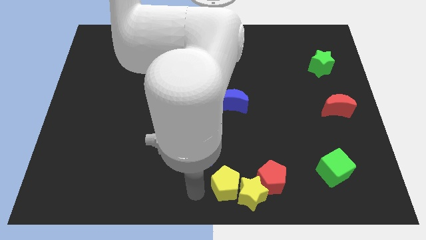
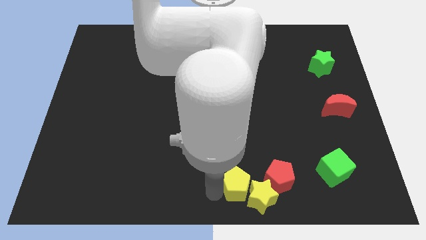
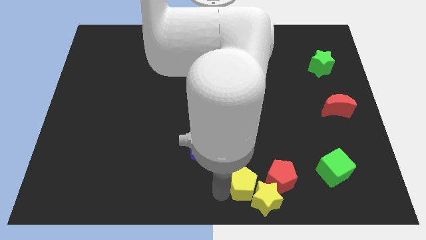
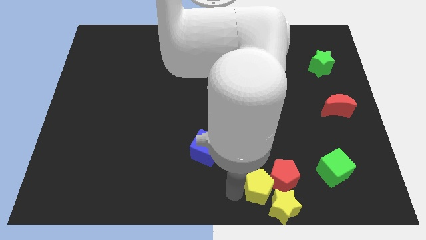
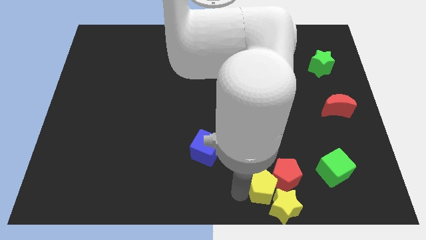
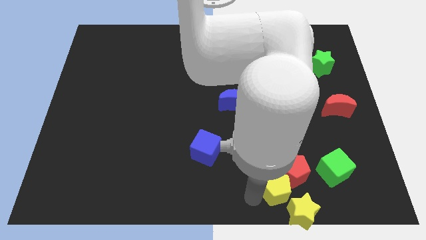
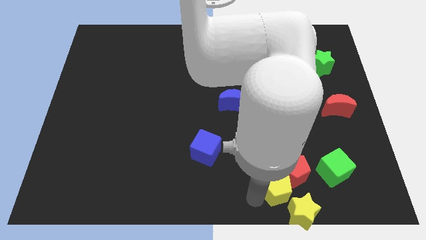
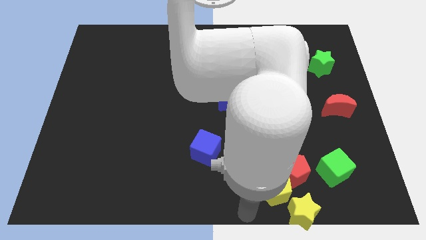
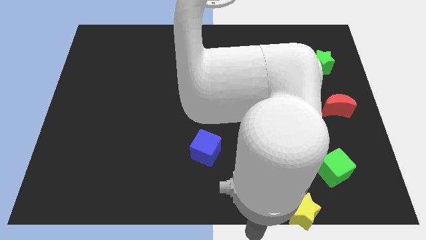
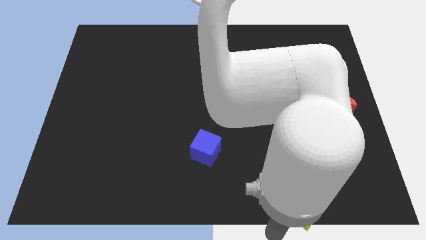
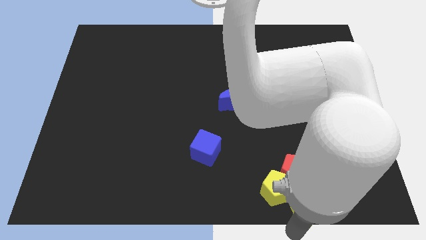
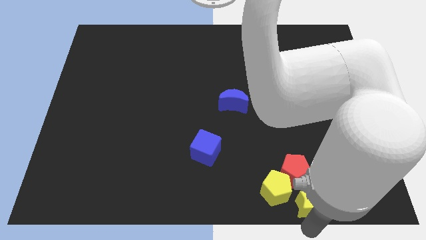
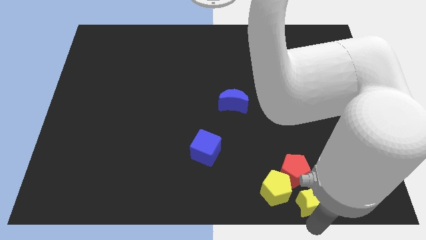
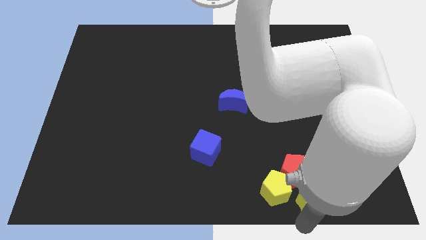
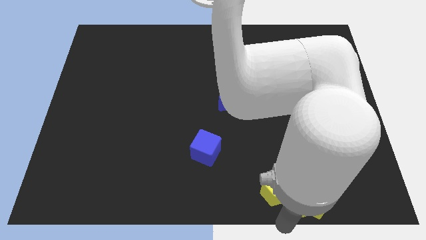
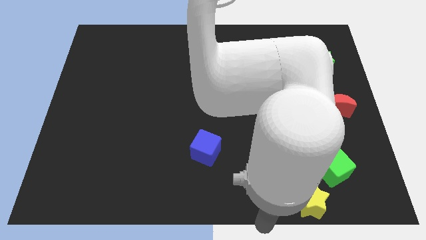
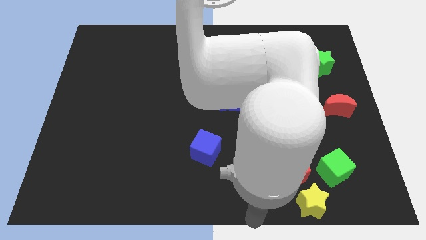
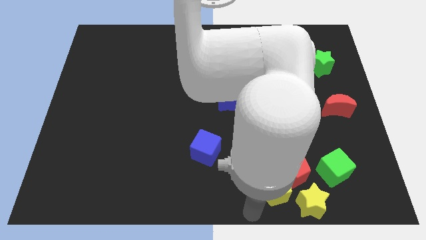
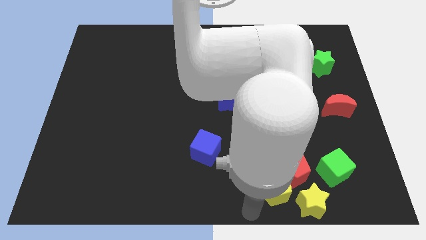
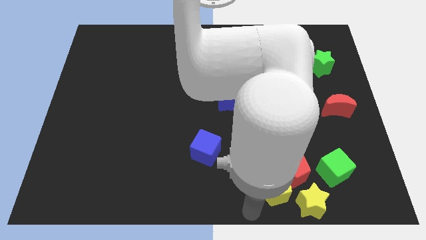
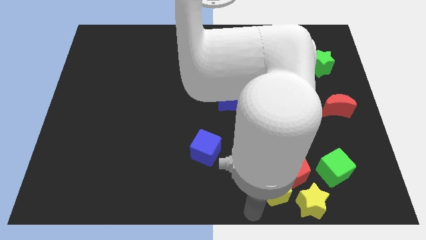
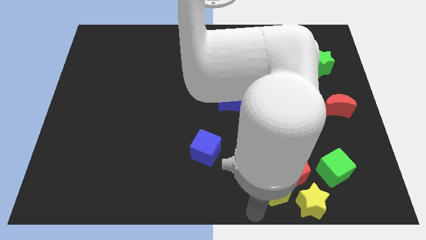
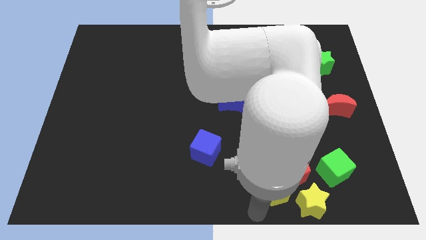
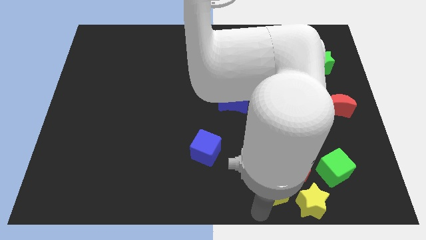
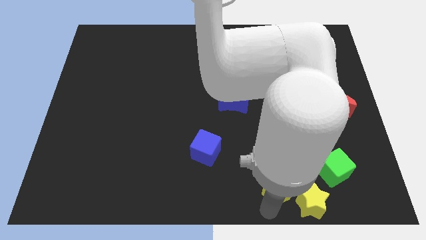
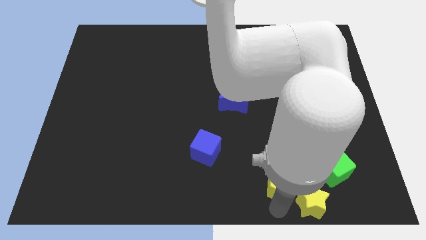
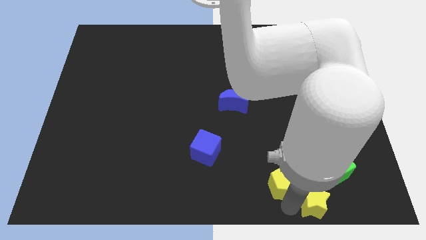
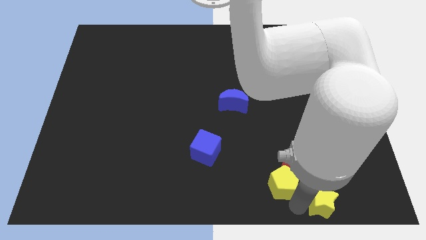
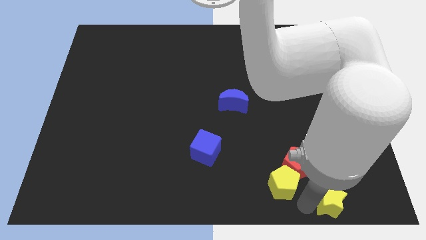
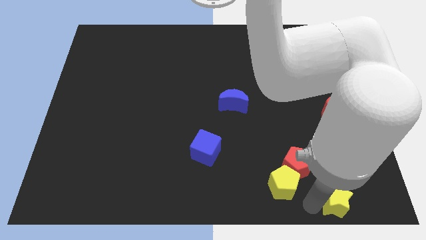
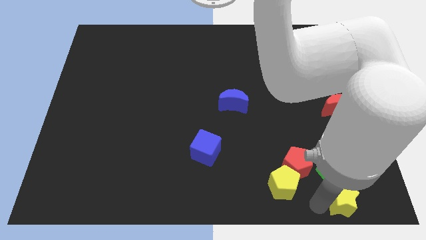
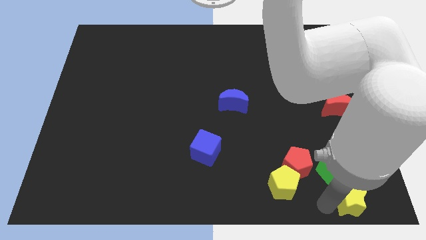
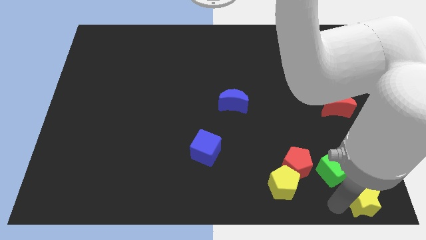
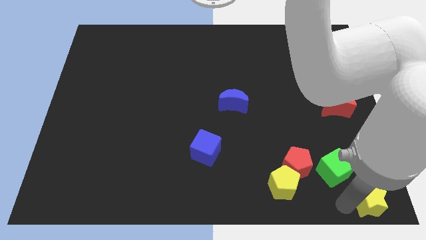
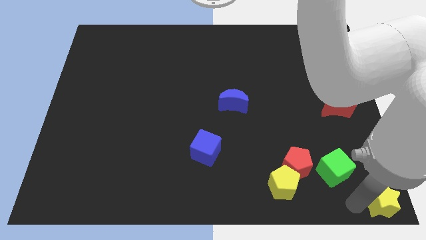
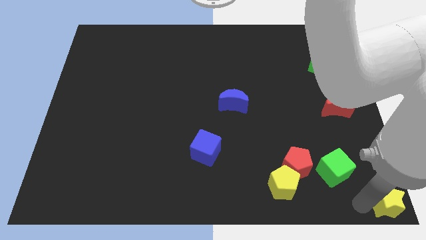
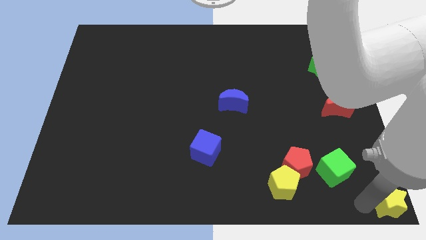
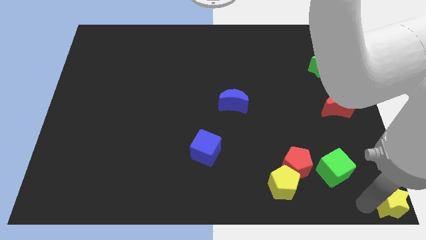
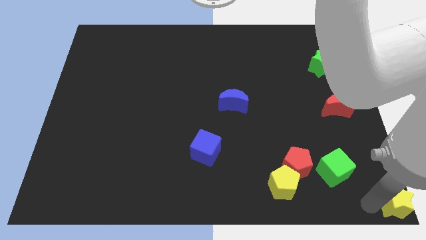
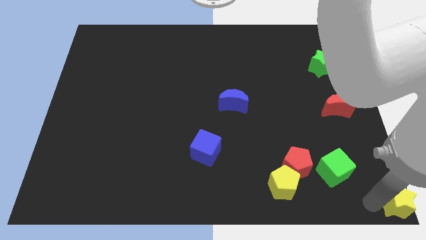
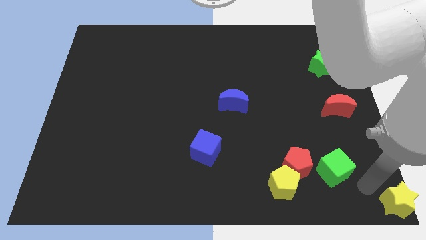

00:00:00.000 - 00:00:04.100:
move the yellow star to the bottom right of the board

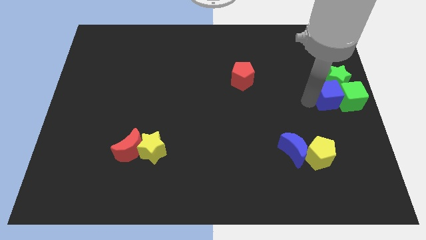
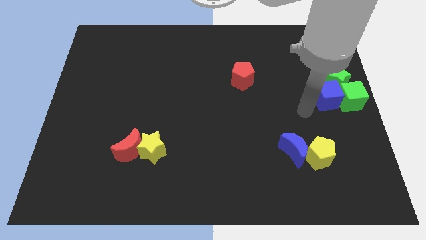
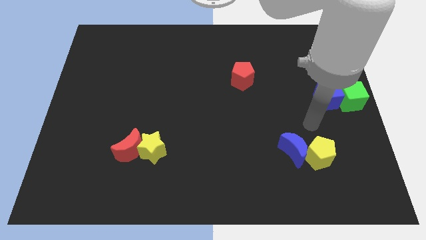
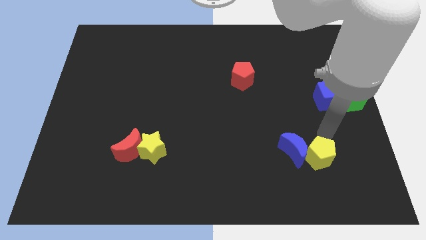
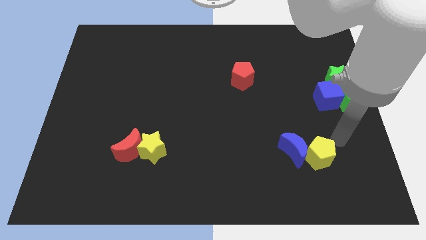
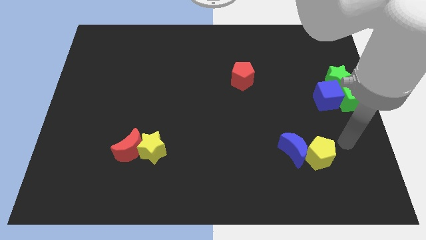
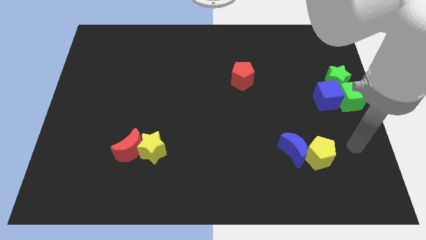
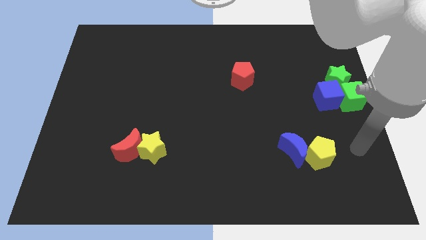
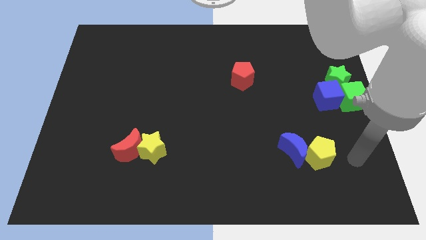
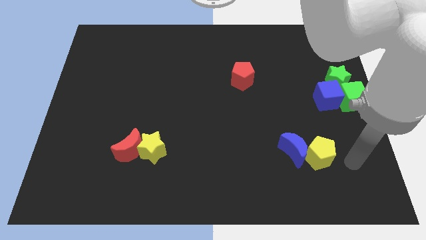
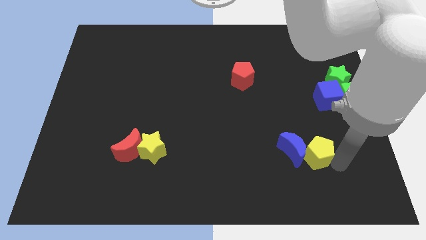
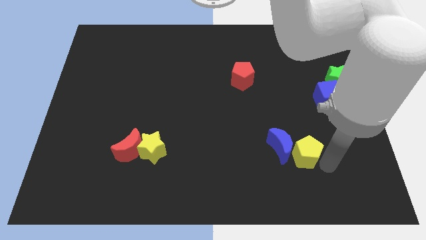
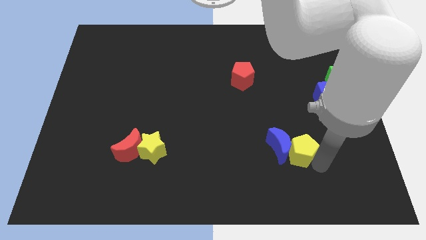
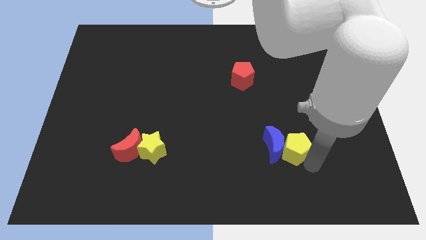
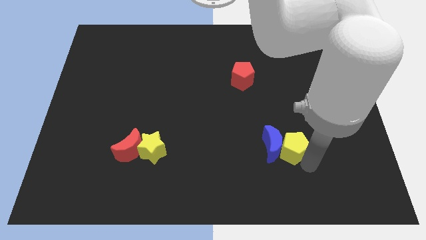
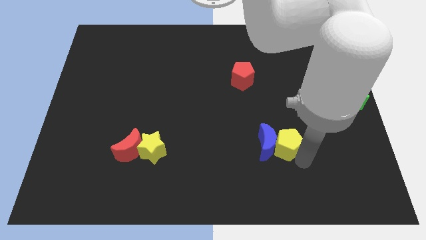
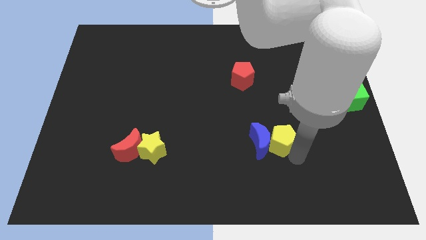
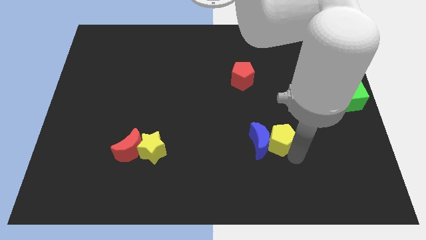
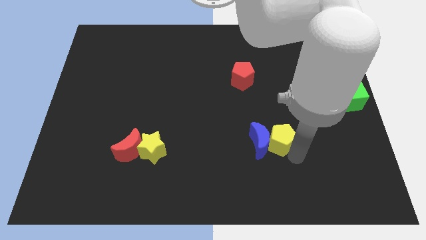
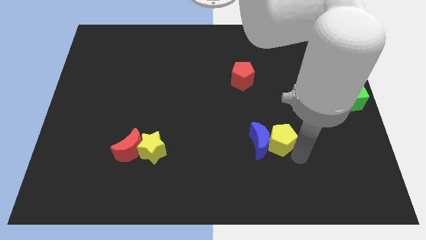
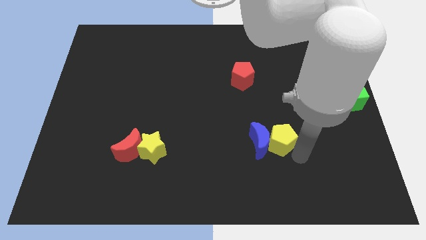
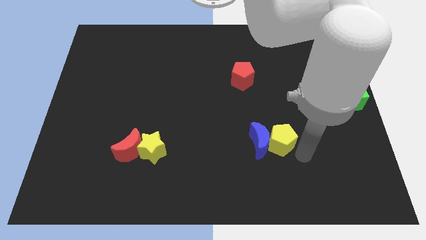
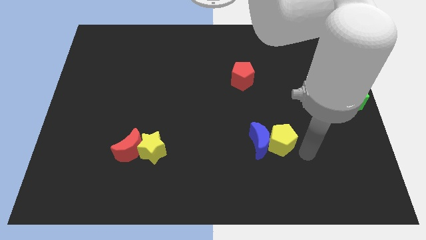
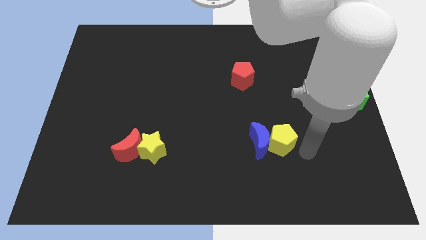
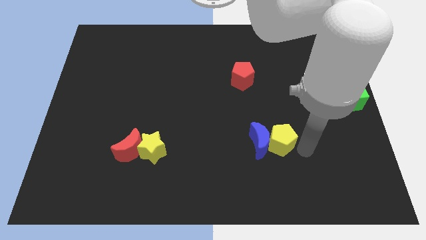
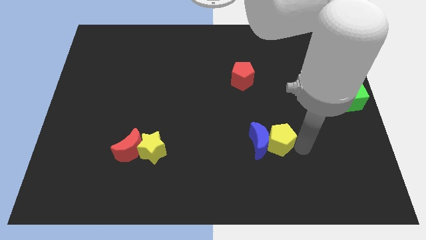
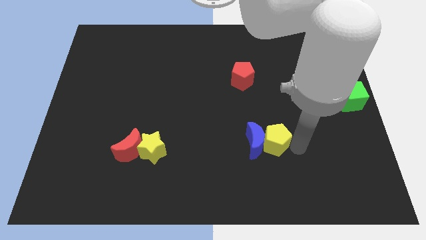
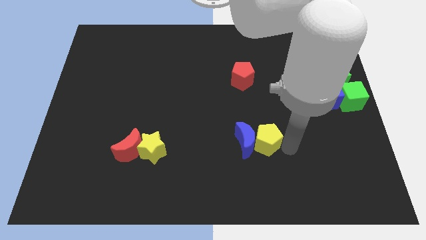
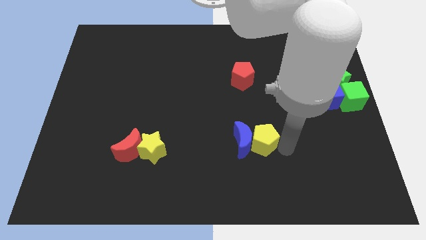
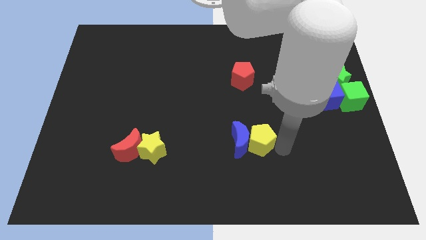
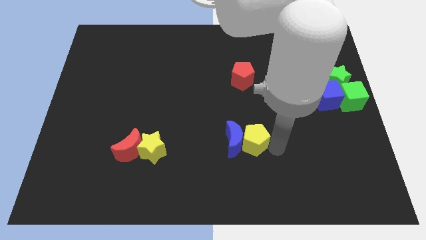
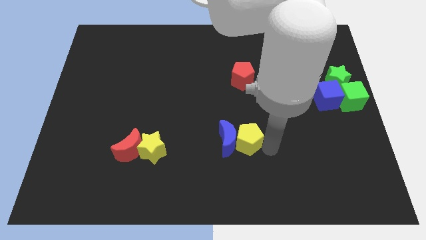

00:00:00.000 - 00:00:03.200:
push the yellow pentagon along with the blue crescent to the bottom of the red pentagon

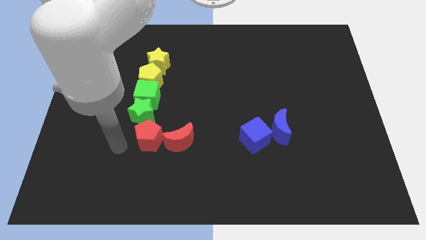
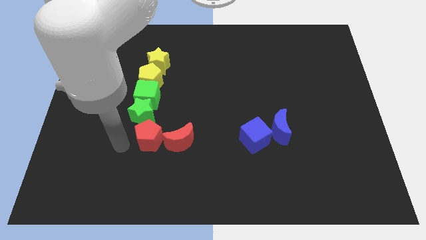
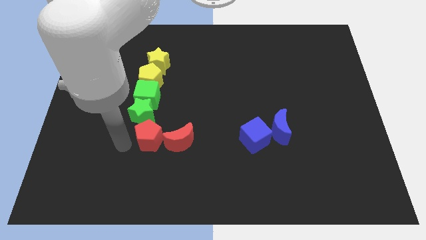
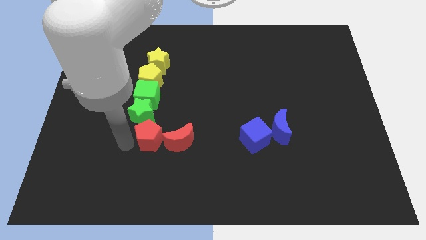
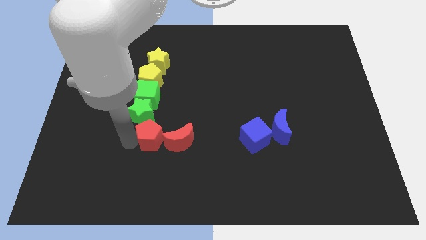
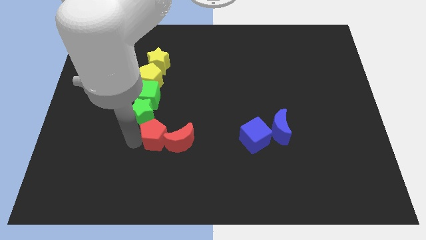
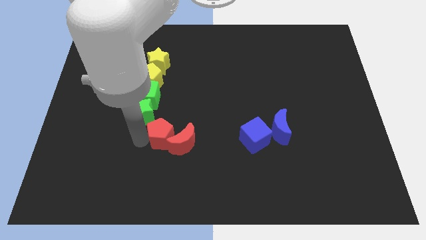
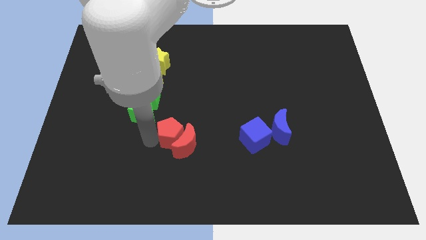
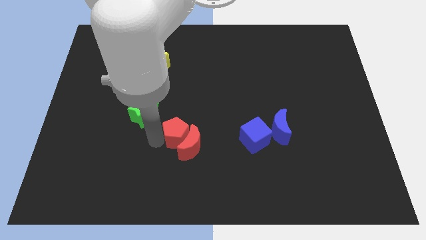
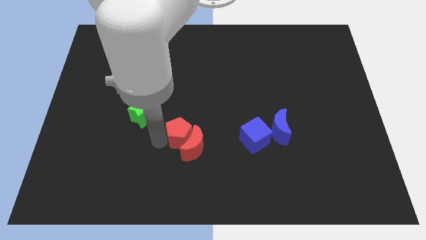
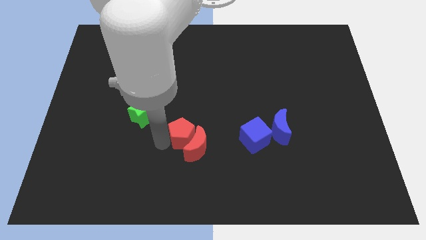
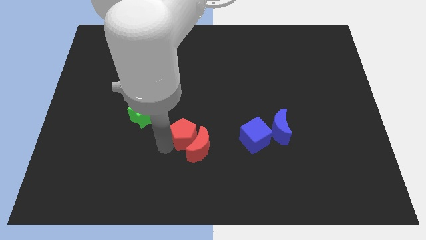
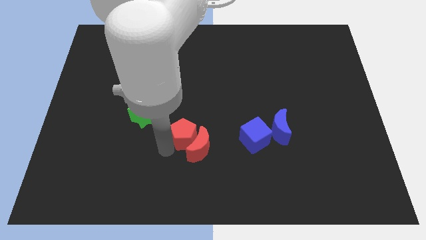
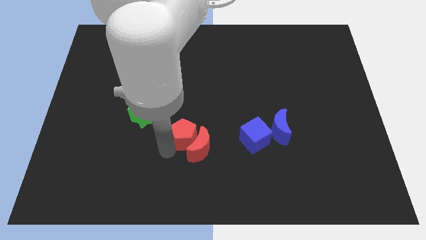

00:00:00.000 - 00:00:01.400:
push the red pentagon into the red moon

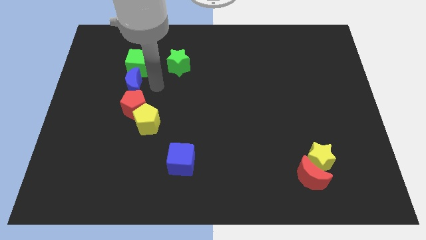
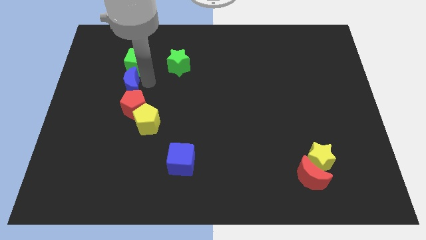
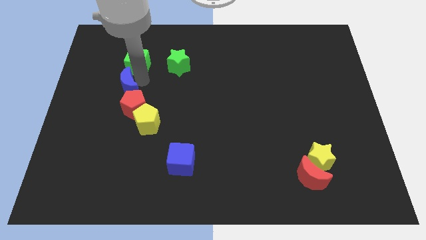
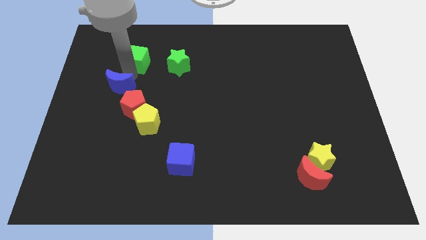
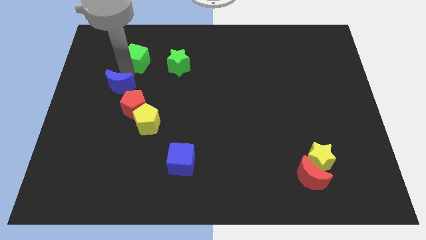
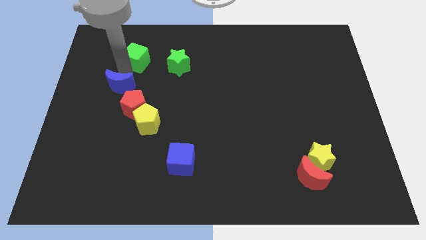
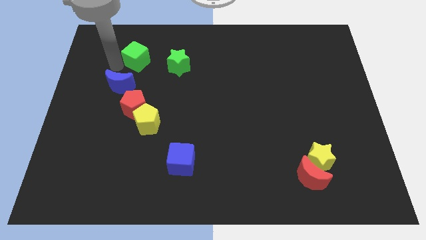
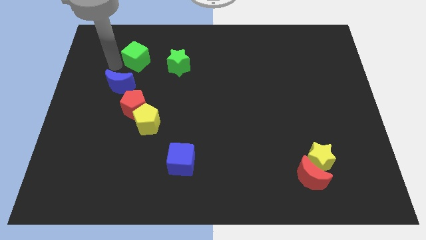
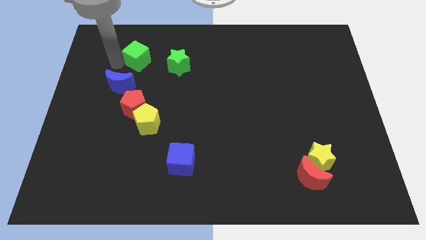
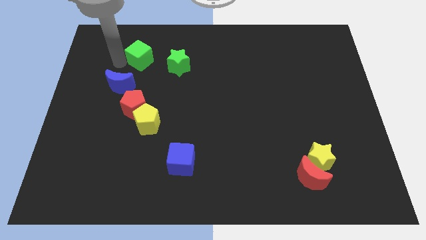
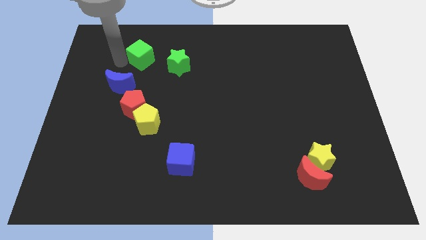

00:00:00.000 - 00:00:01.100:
separate the green cube and blue moon from each other
